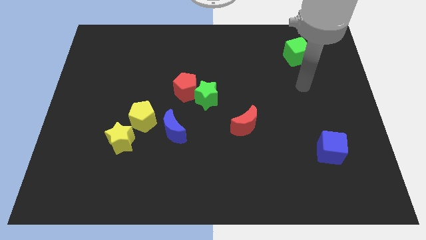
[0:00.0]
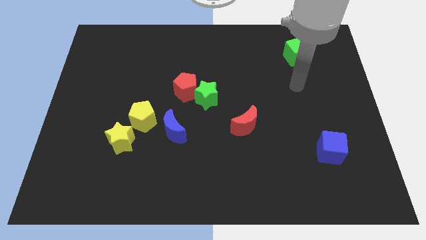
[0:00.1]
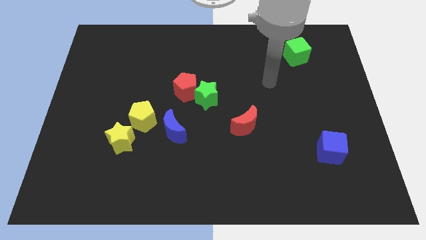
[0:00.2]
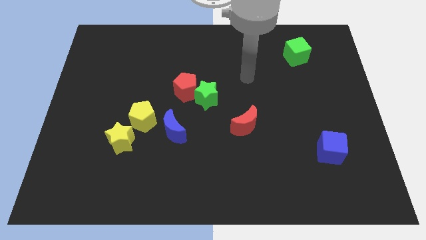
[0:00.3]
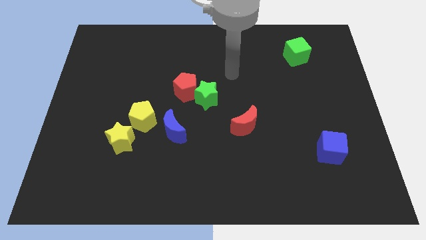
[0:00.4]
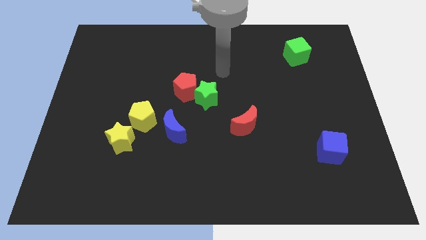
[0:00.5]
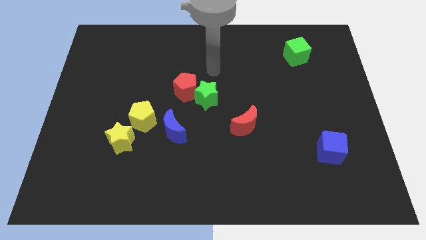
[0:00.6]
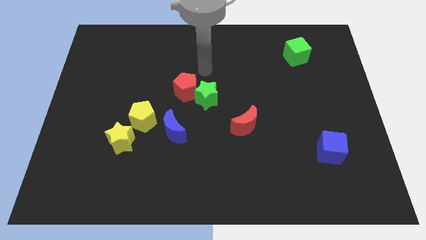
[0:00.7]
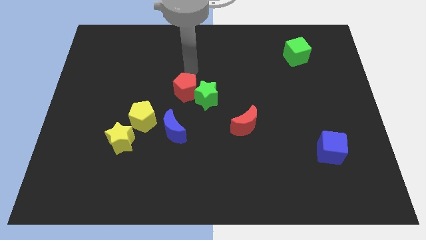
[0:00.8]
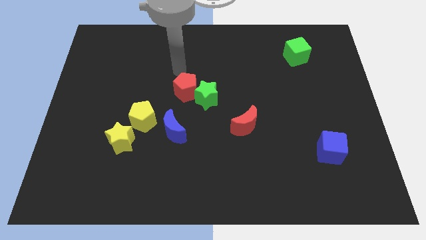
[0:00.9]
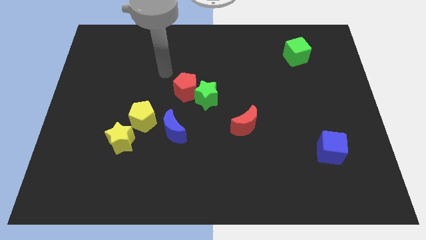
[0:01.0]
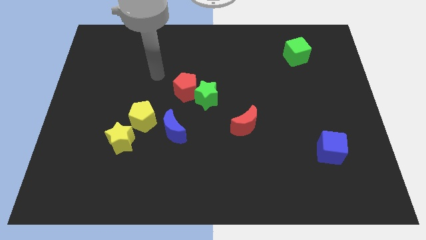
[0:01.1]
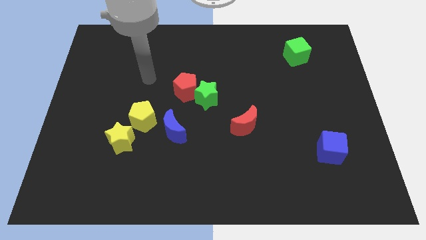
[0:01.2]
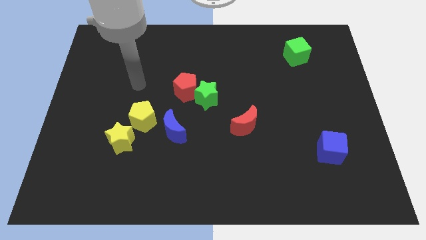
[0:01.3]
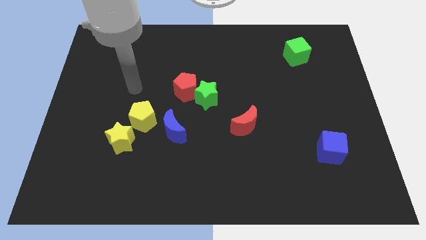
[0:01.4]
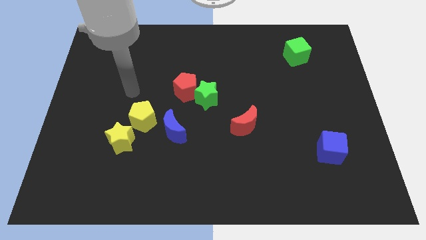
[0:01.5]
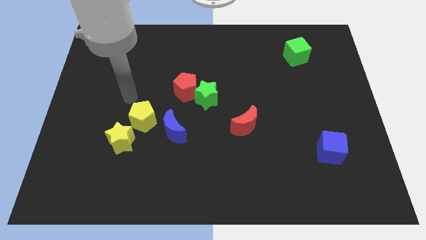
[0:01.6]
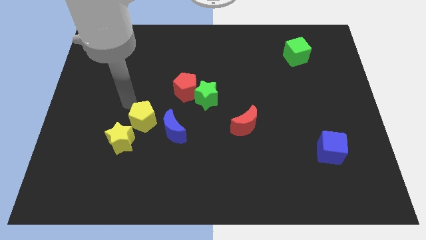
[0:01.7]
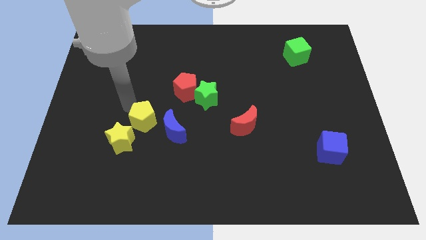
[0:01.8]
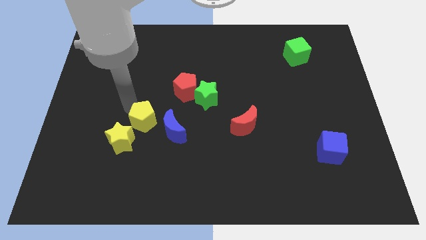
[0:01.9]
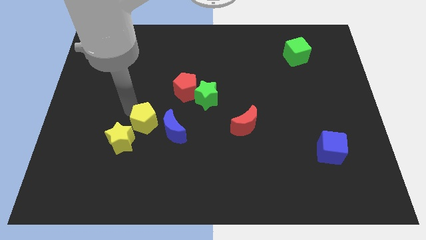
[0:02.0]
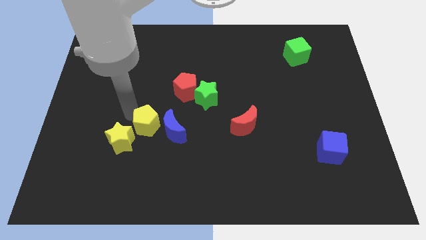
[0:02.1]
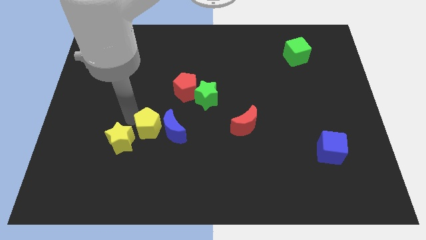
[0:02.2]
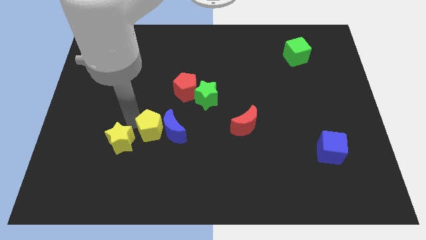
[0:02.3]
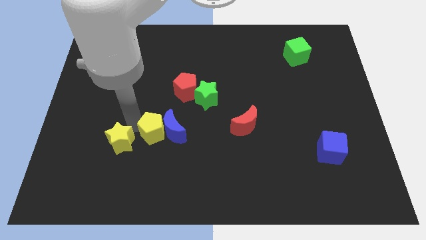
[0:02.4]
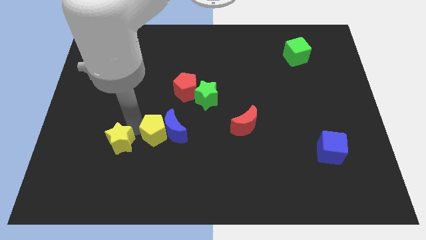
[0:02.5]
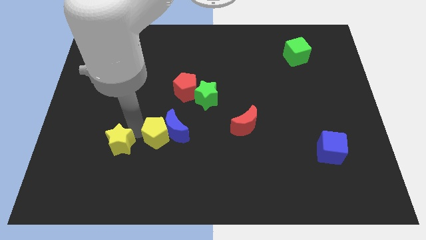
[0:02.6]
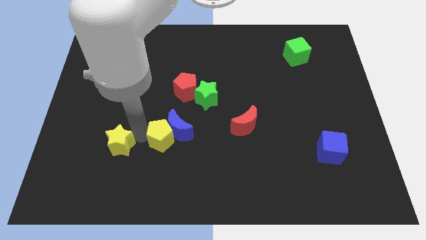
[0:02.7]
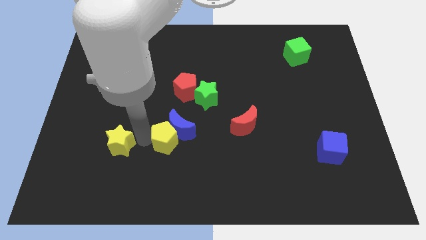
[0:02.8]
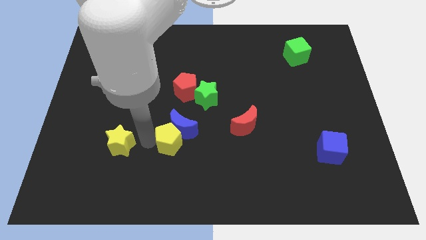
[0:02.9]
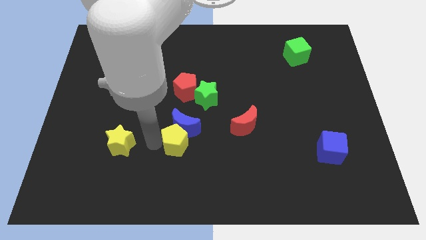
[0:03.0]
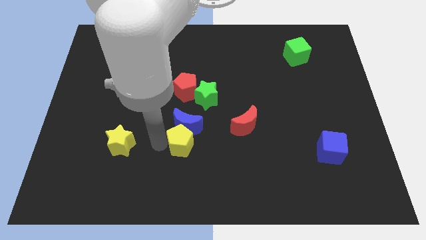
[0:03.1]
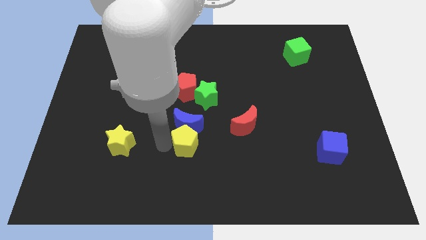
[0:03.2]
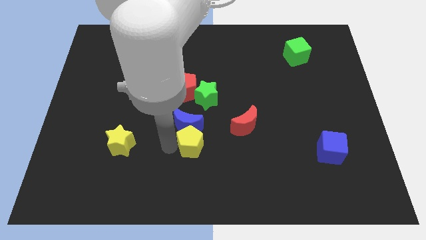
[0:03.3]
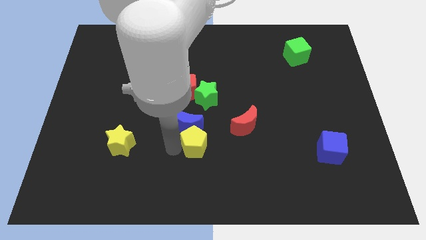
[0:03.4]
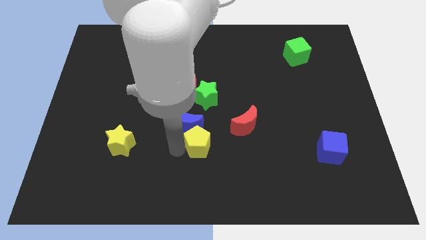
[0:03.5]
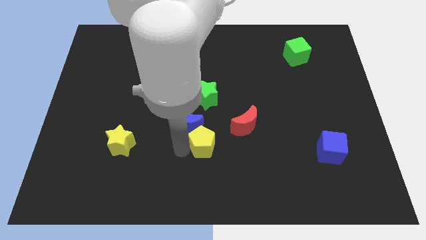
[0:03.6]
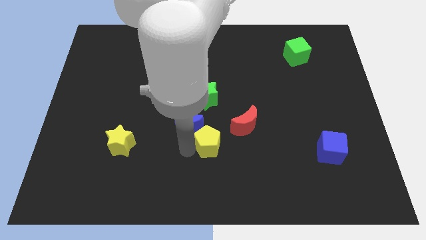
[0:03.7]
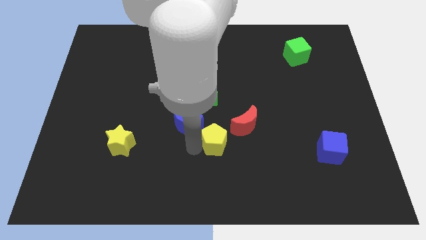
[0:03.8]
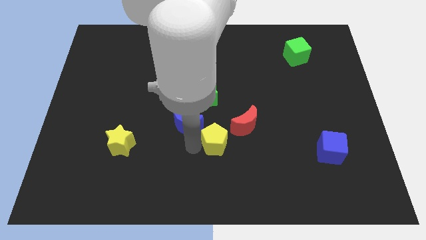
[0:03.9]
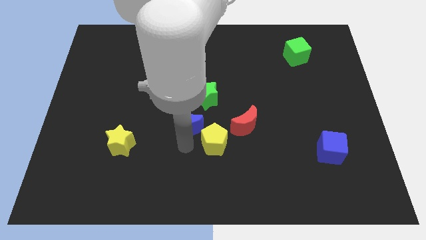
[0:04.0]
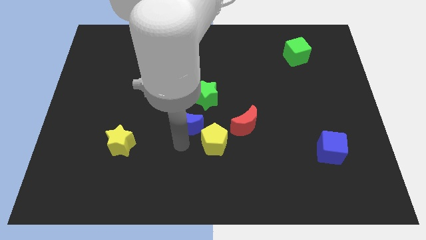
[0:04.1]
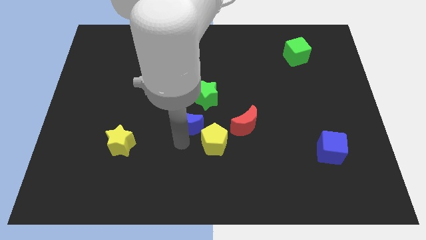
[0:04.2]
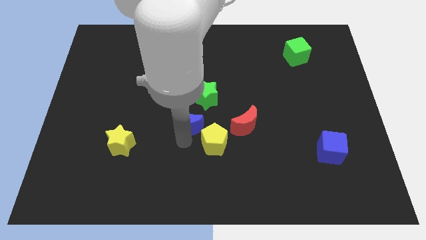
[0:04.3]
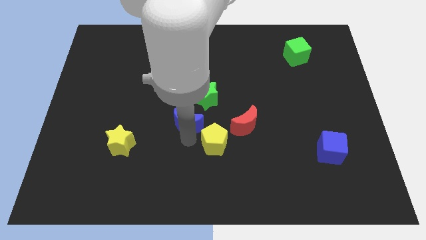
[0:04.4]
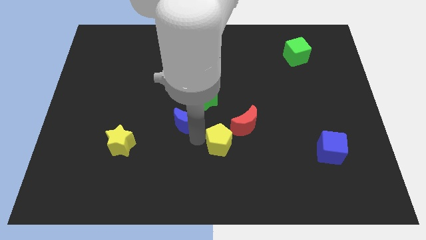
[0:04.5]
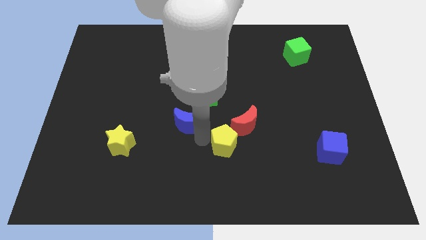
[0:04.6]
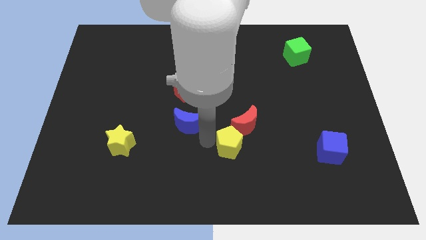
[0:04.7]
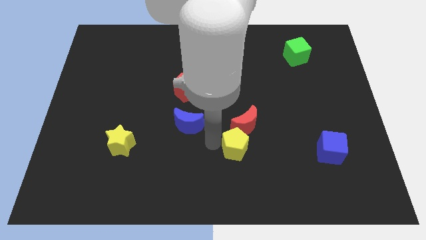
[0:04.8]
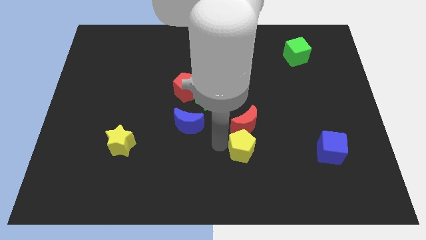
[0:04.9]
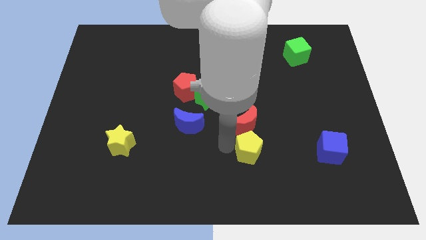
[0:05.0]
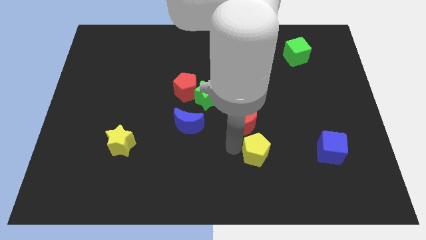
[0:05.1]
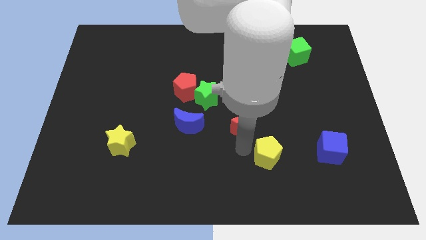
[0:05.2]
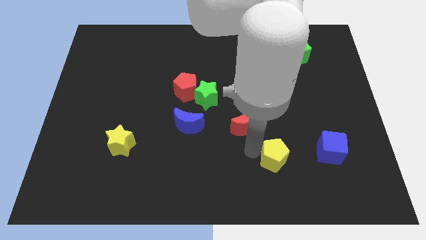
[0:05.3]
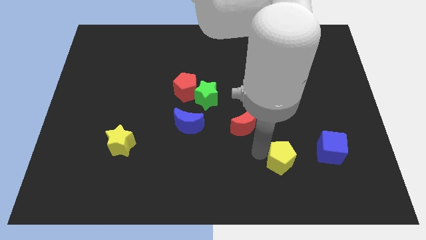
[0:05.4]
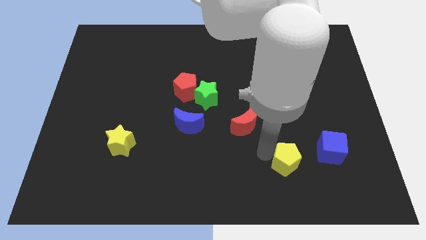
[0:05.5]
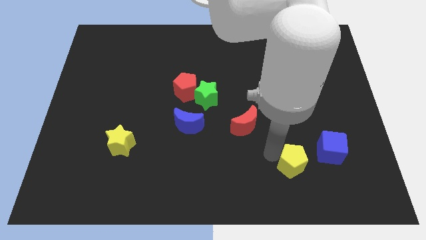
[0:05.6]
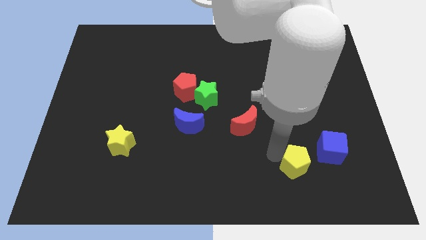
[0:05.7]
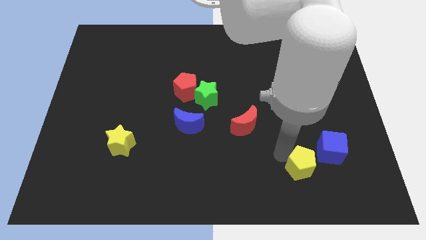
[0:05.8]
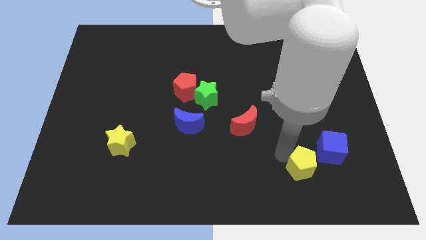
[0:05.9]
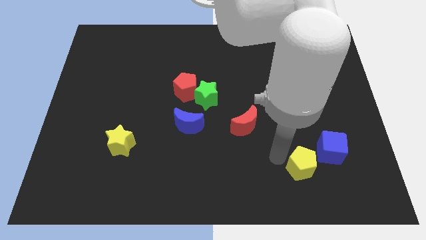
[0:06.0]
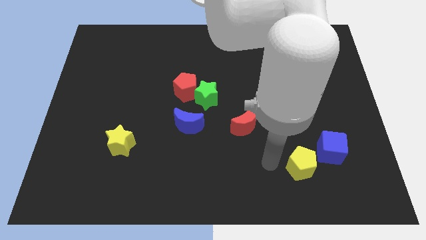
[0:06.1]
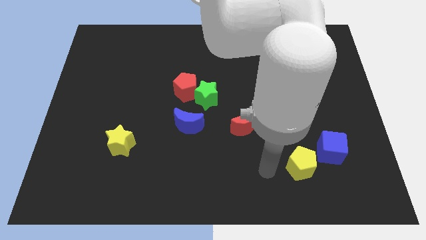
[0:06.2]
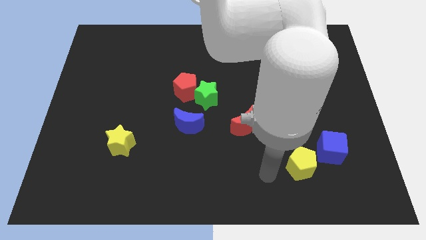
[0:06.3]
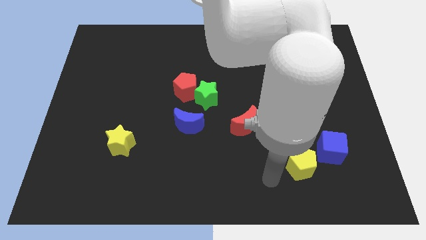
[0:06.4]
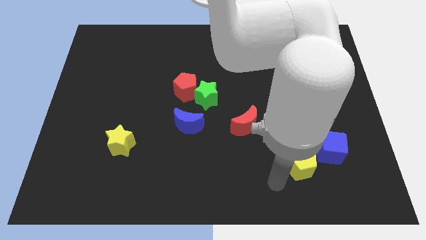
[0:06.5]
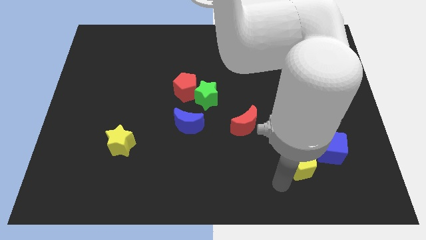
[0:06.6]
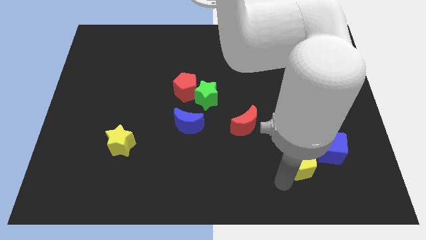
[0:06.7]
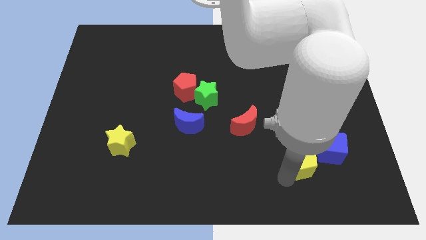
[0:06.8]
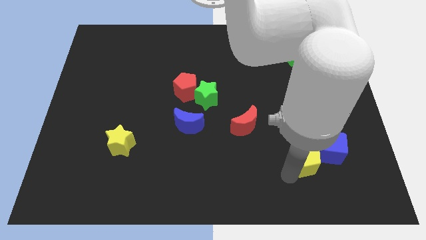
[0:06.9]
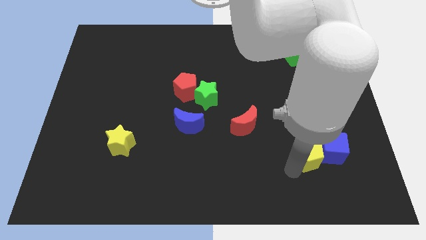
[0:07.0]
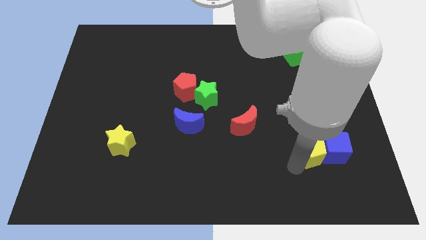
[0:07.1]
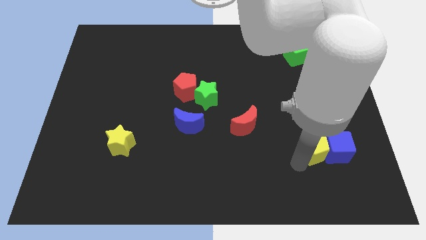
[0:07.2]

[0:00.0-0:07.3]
push the yellow pentagon towards the blue cube

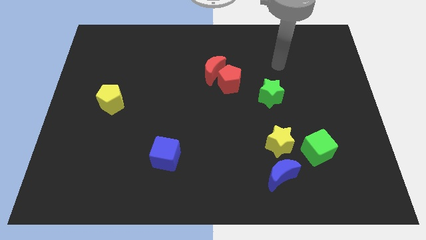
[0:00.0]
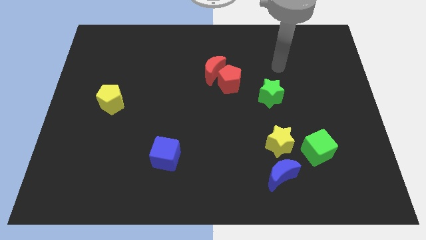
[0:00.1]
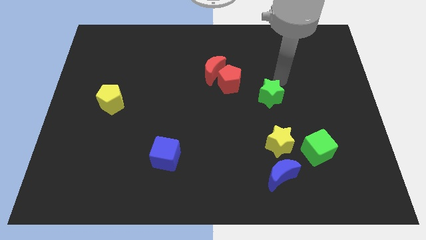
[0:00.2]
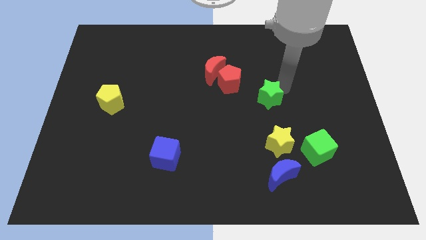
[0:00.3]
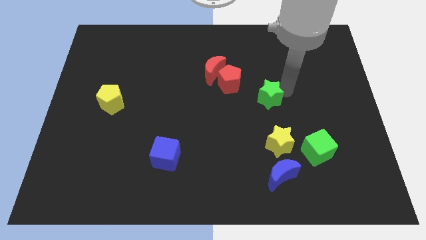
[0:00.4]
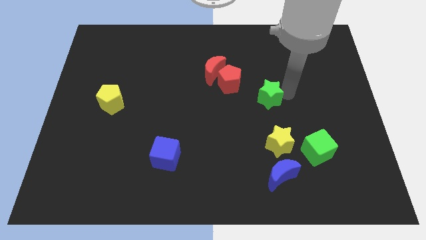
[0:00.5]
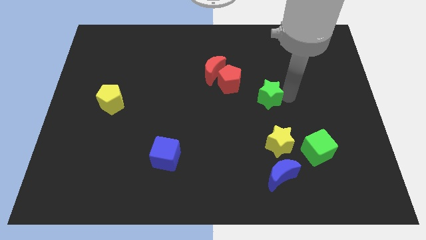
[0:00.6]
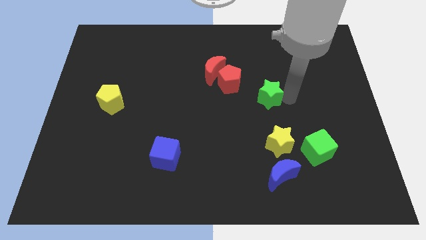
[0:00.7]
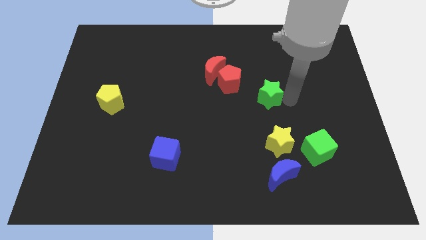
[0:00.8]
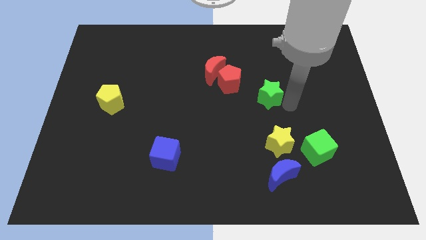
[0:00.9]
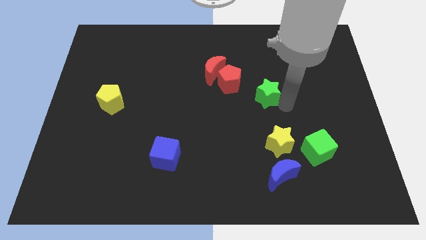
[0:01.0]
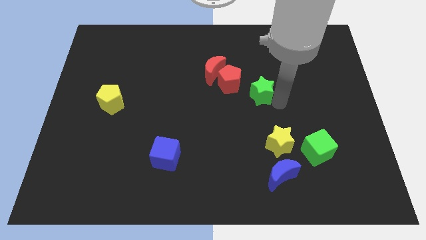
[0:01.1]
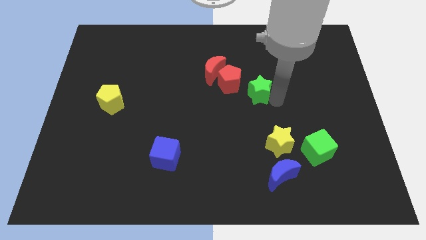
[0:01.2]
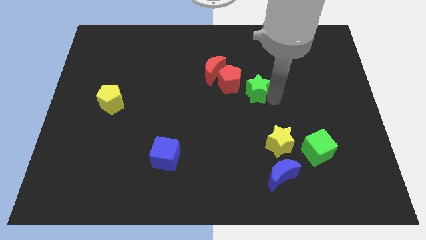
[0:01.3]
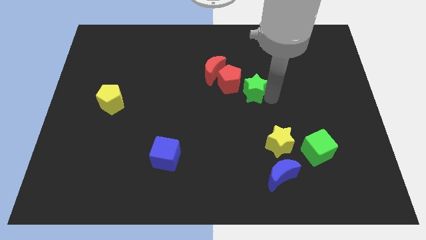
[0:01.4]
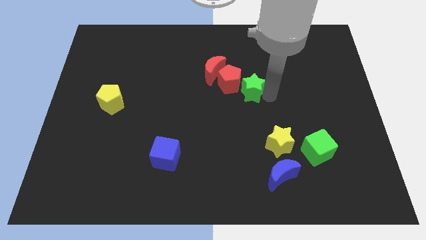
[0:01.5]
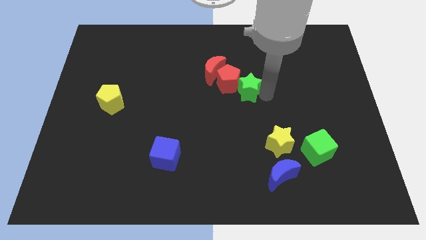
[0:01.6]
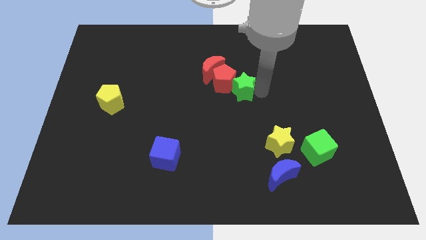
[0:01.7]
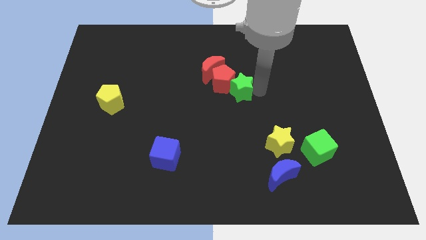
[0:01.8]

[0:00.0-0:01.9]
move the green star towards the red pentagon
